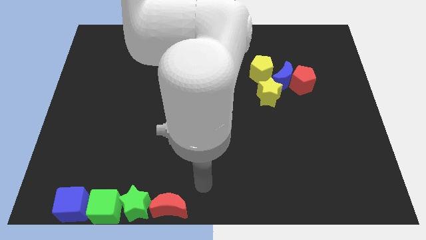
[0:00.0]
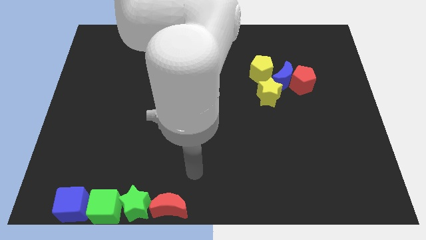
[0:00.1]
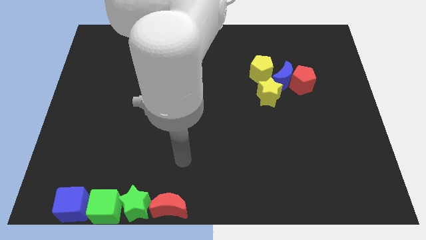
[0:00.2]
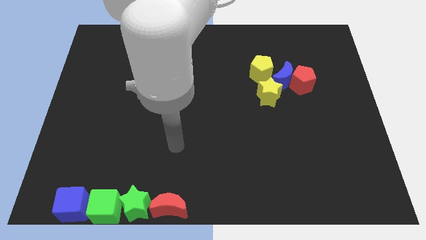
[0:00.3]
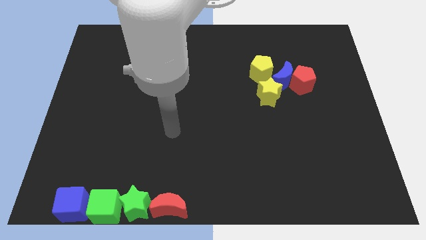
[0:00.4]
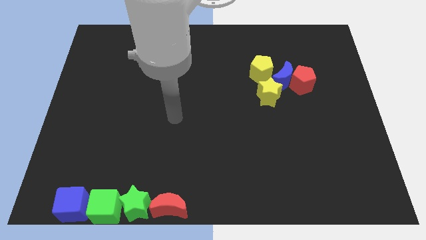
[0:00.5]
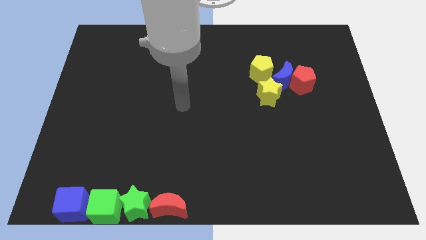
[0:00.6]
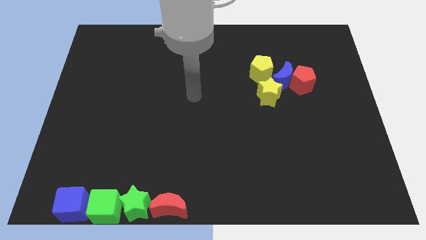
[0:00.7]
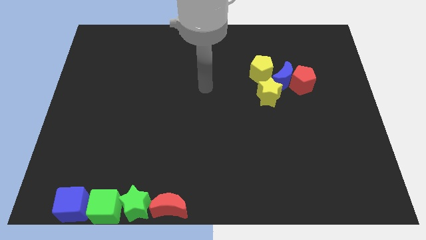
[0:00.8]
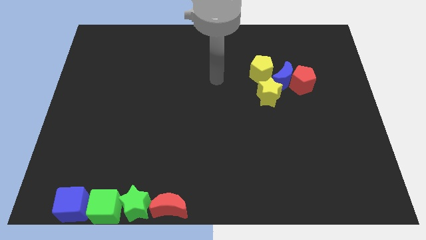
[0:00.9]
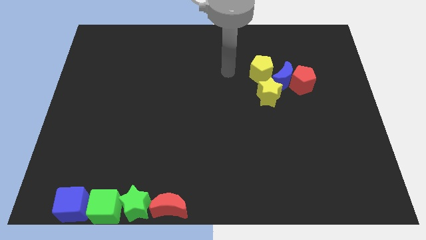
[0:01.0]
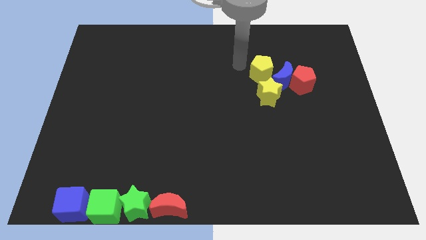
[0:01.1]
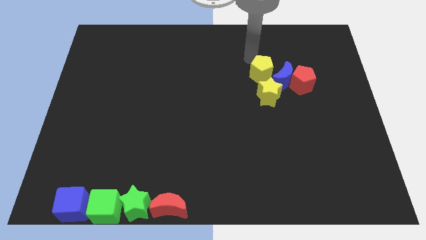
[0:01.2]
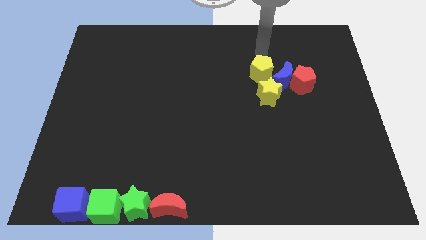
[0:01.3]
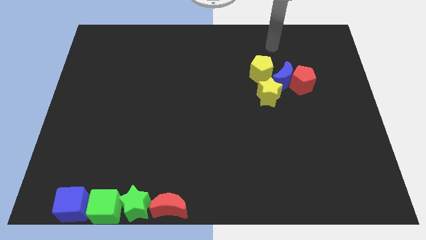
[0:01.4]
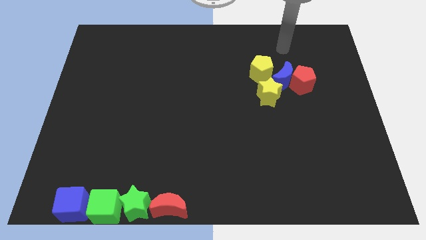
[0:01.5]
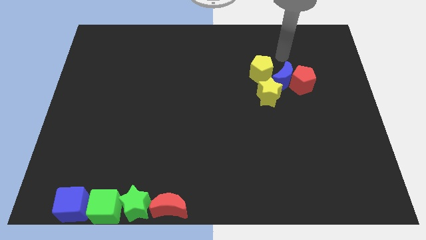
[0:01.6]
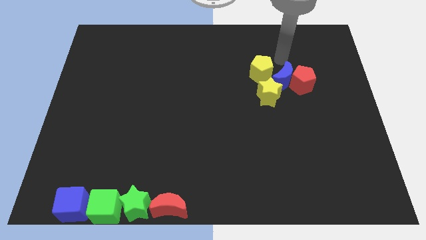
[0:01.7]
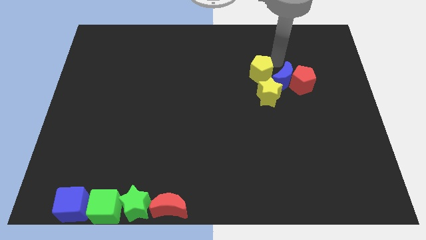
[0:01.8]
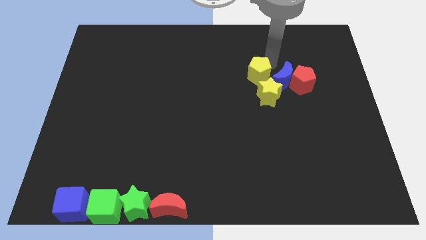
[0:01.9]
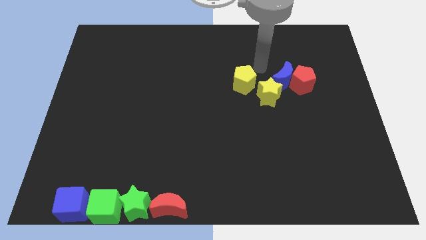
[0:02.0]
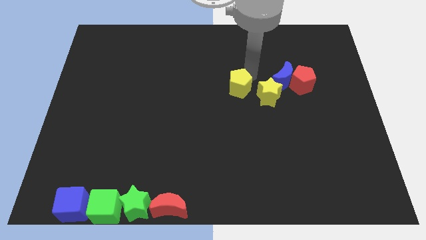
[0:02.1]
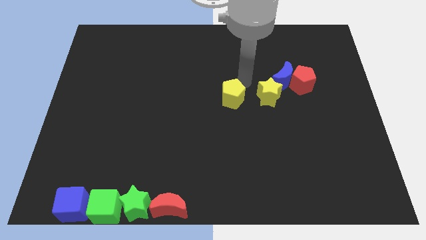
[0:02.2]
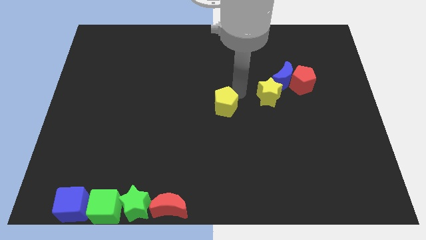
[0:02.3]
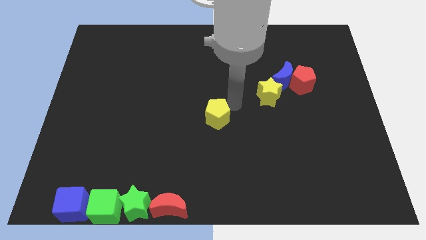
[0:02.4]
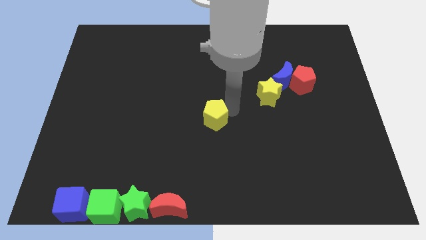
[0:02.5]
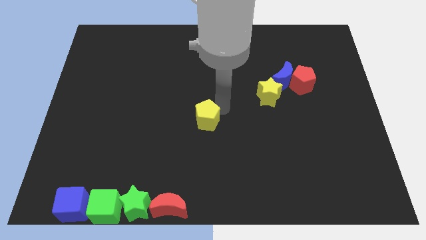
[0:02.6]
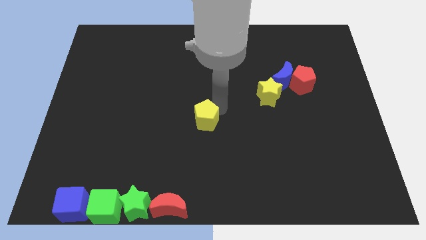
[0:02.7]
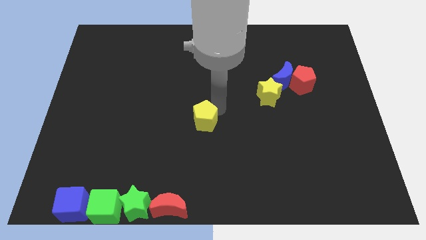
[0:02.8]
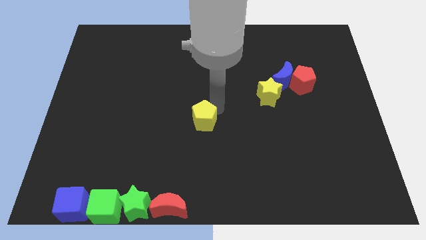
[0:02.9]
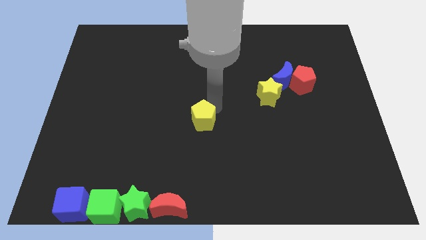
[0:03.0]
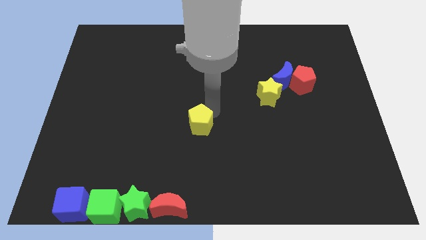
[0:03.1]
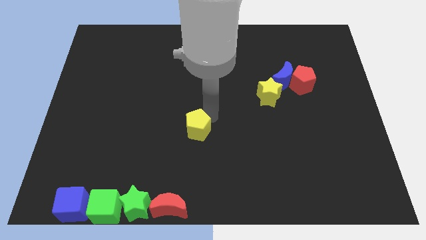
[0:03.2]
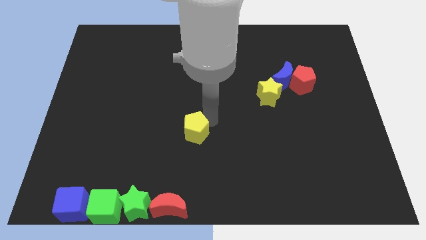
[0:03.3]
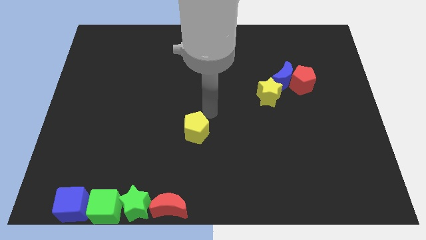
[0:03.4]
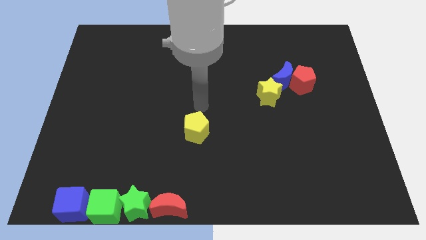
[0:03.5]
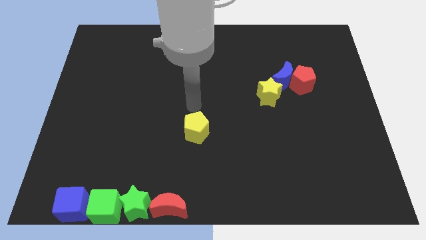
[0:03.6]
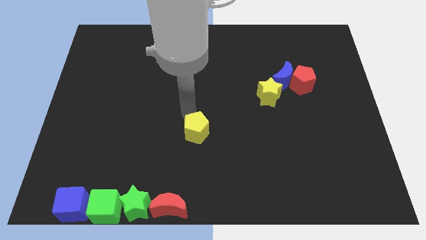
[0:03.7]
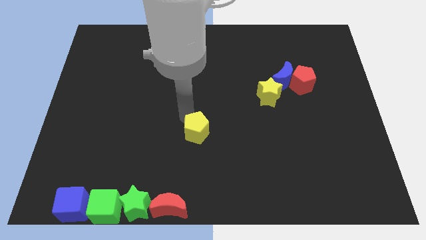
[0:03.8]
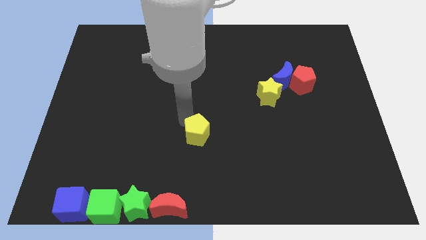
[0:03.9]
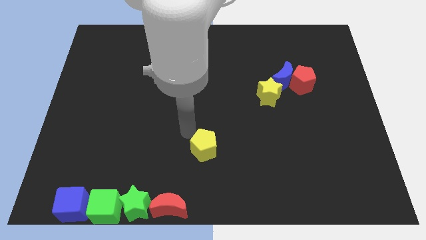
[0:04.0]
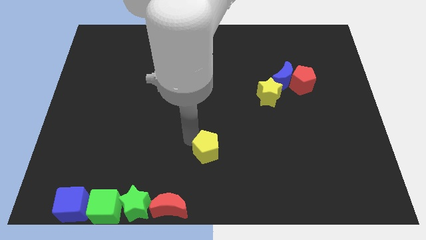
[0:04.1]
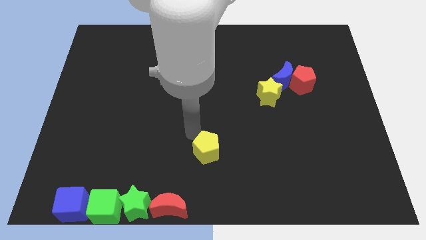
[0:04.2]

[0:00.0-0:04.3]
move the yellow pentagon to the bottom of the board

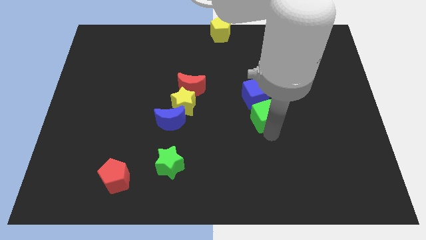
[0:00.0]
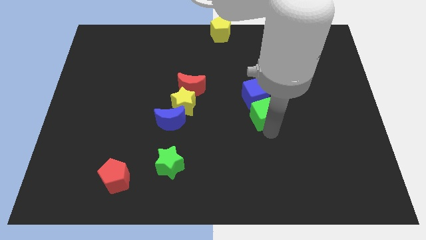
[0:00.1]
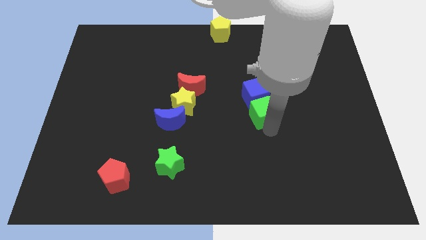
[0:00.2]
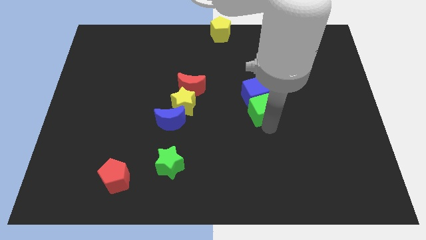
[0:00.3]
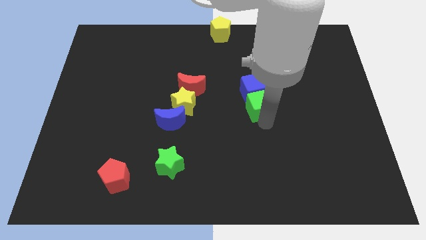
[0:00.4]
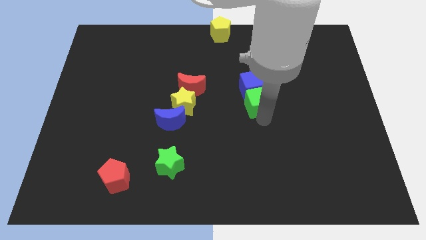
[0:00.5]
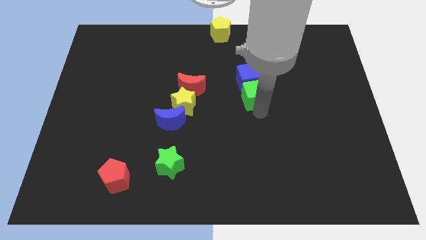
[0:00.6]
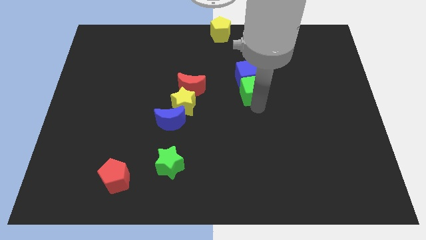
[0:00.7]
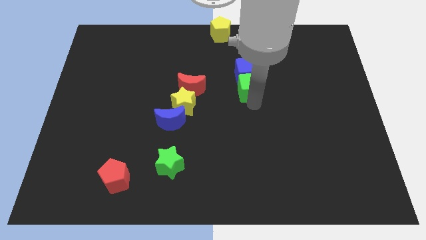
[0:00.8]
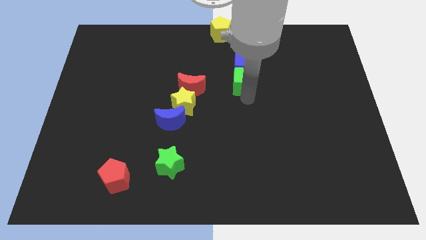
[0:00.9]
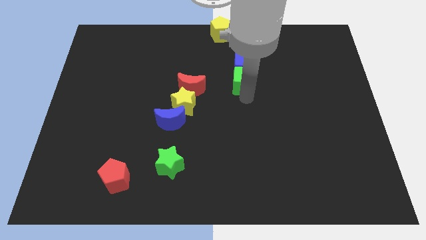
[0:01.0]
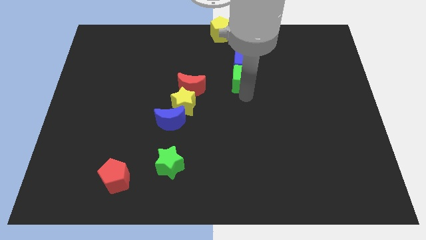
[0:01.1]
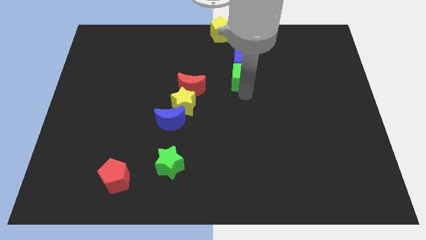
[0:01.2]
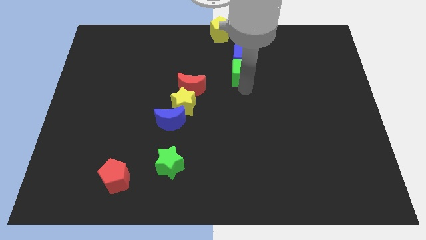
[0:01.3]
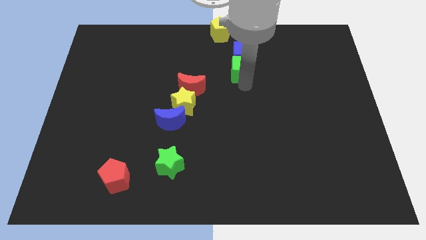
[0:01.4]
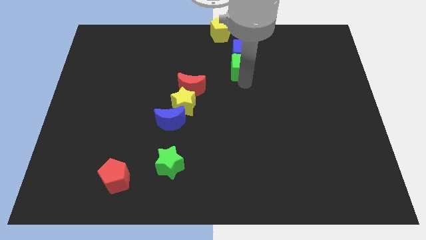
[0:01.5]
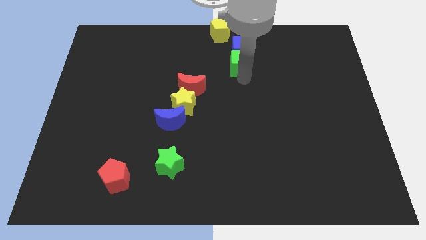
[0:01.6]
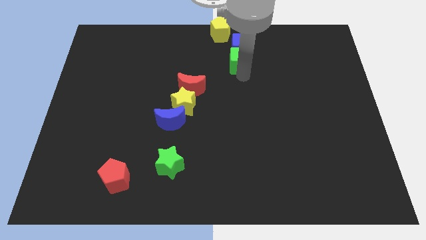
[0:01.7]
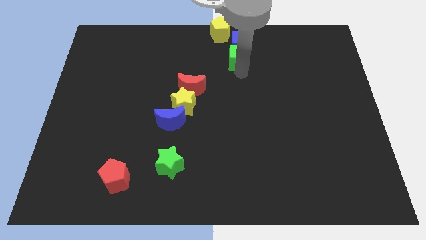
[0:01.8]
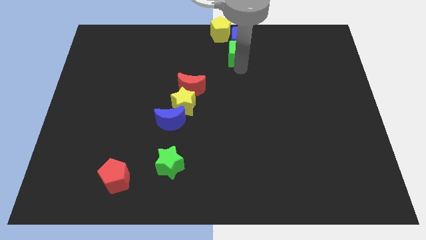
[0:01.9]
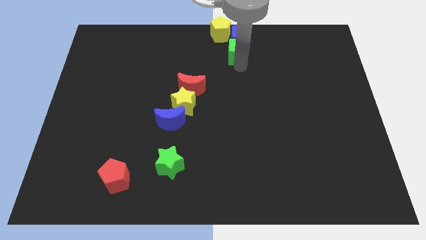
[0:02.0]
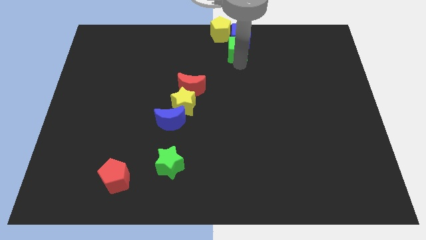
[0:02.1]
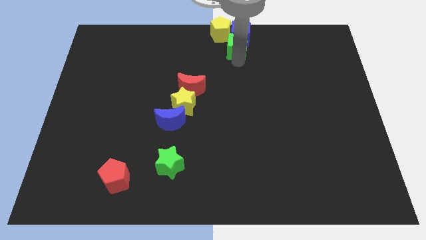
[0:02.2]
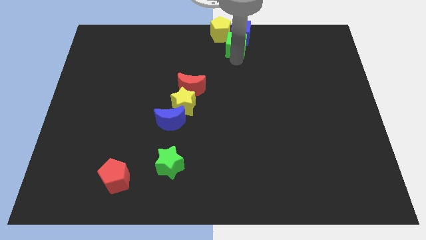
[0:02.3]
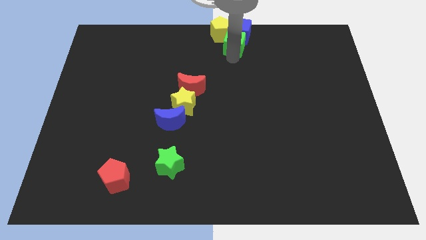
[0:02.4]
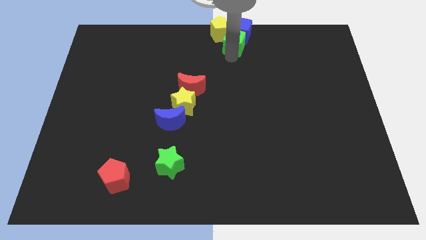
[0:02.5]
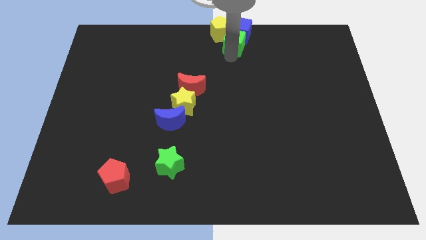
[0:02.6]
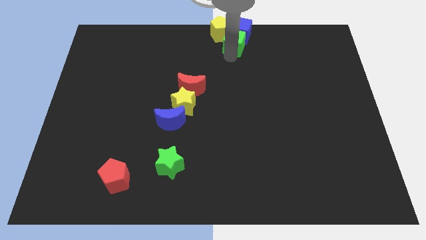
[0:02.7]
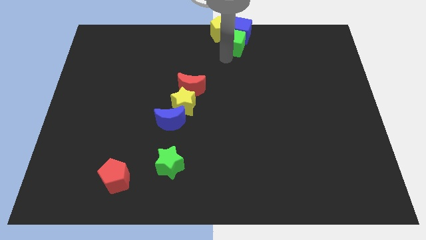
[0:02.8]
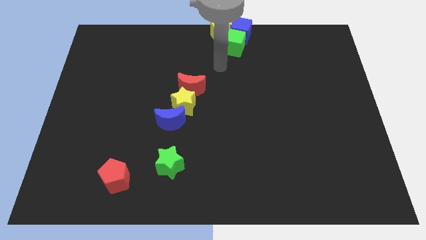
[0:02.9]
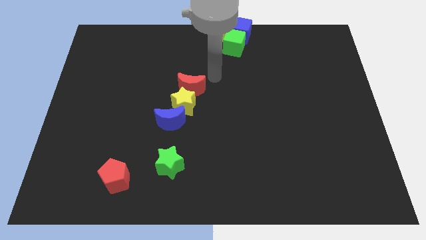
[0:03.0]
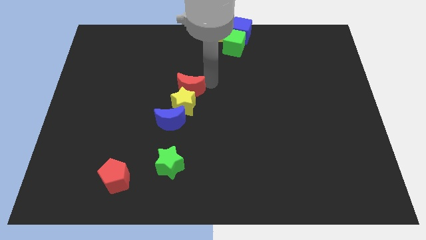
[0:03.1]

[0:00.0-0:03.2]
place the green and the blue cube at the top center

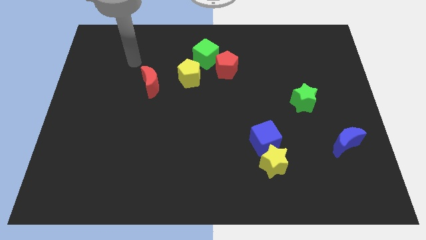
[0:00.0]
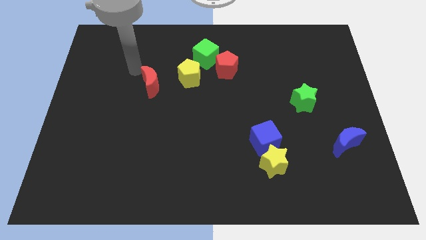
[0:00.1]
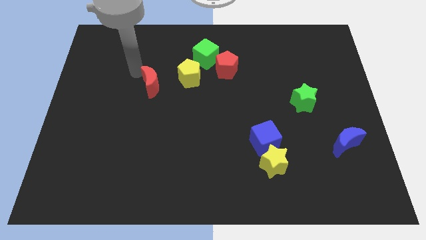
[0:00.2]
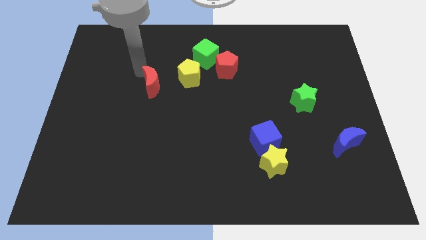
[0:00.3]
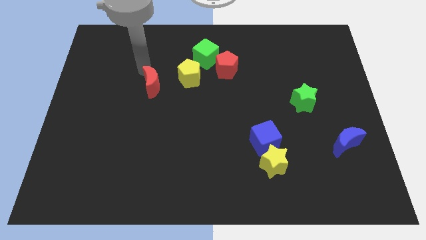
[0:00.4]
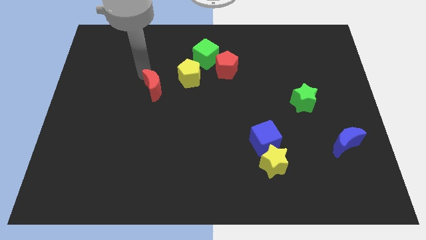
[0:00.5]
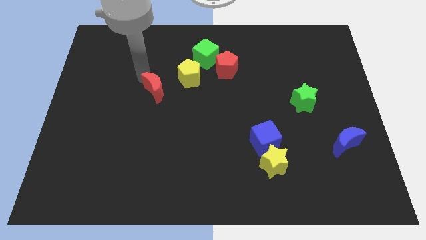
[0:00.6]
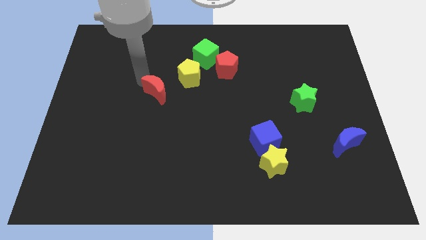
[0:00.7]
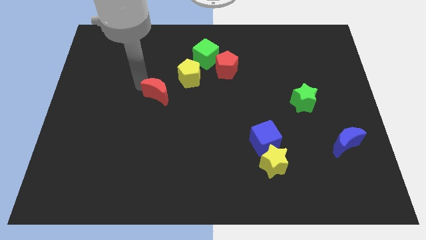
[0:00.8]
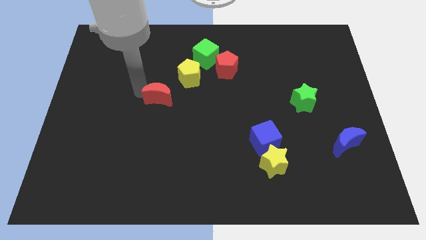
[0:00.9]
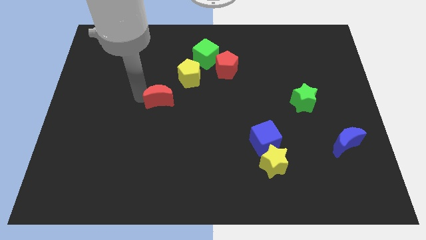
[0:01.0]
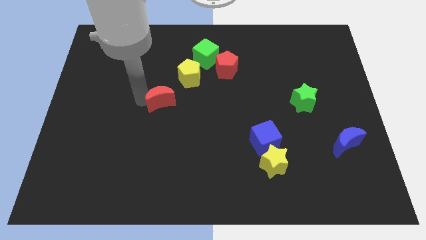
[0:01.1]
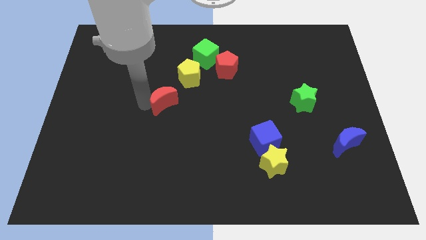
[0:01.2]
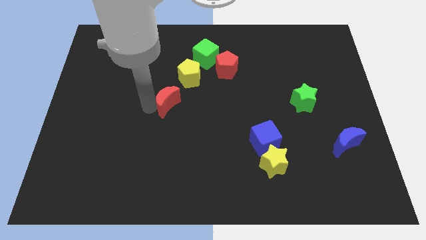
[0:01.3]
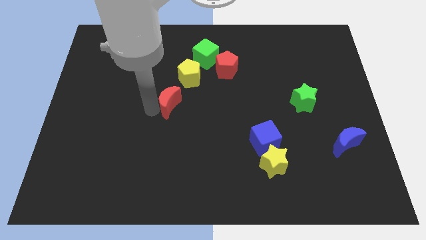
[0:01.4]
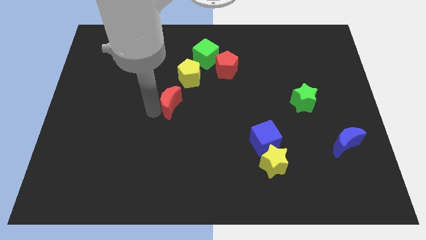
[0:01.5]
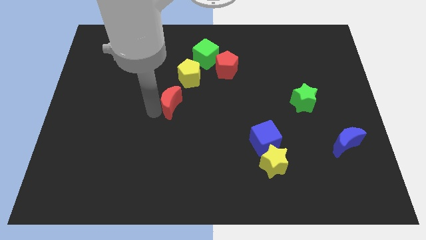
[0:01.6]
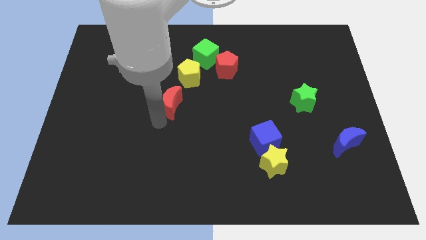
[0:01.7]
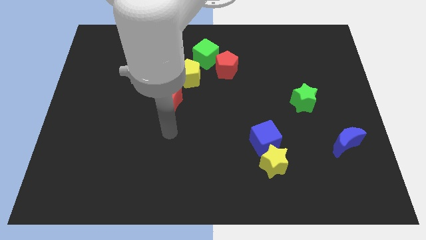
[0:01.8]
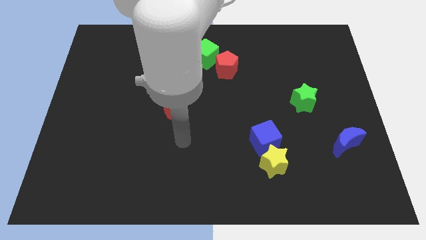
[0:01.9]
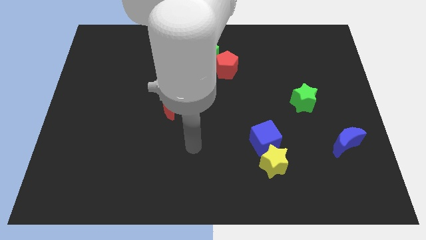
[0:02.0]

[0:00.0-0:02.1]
place the red moon diagonal to the yellow pentagon
